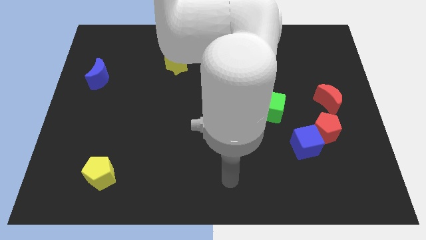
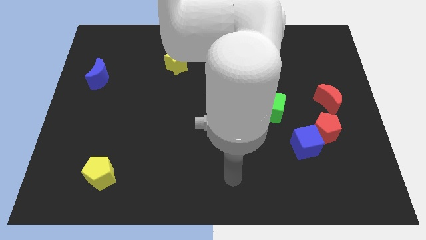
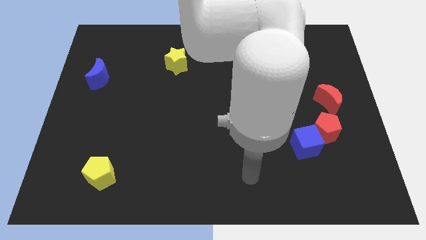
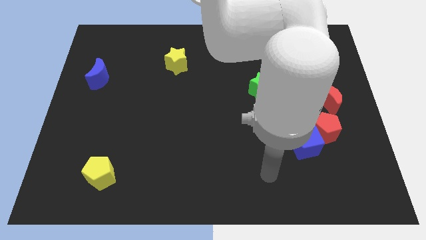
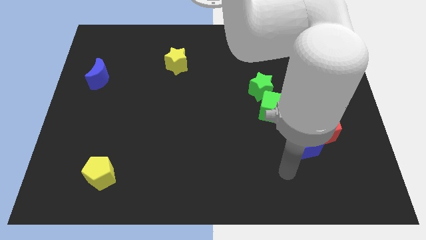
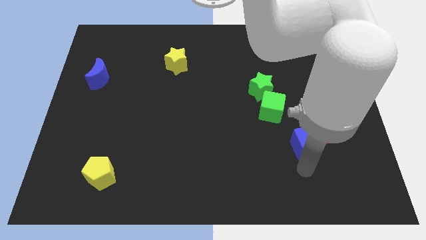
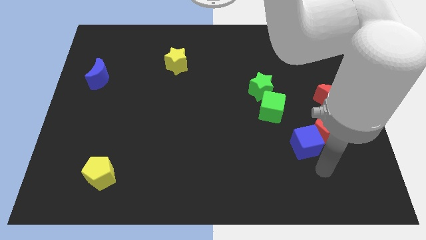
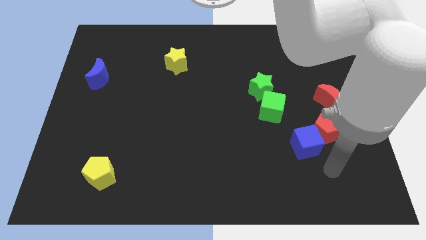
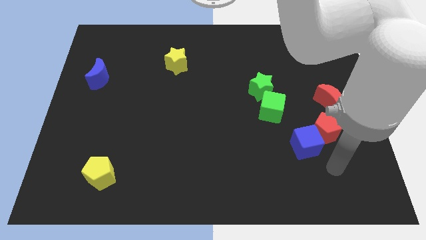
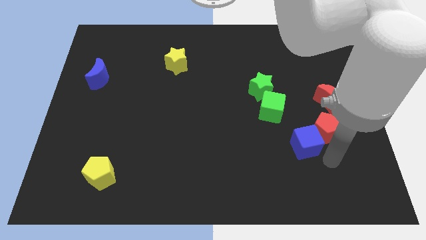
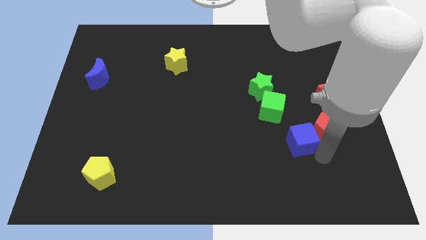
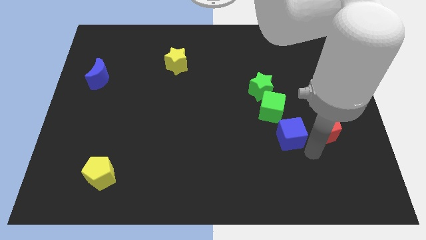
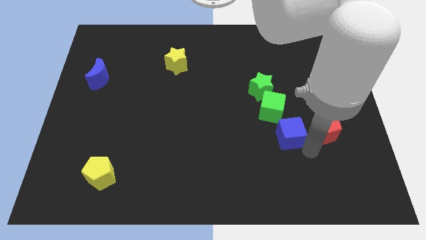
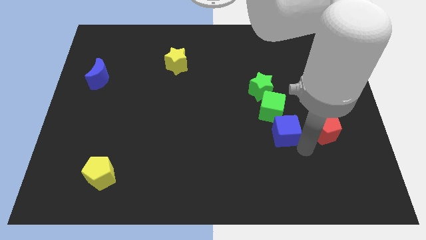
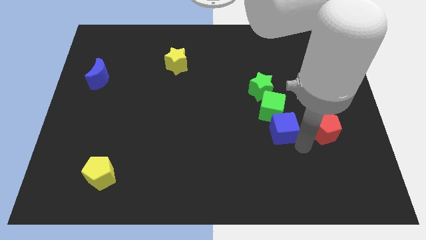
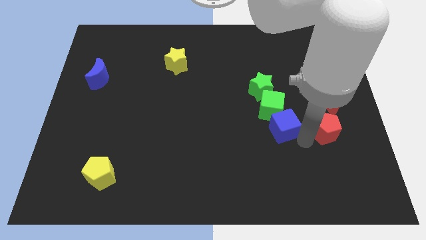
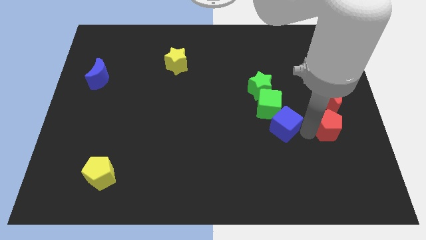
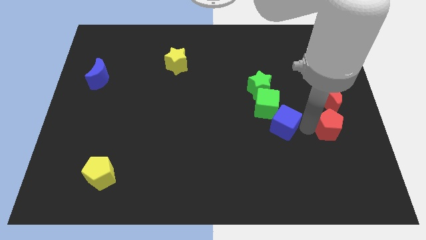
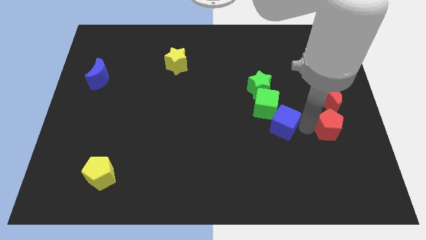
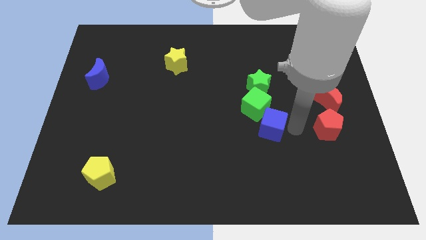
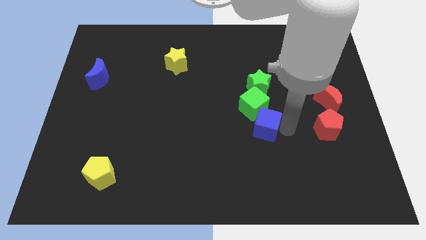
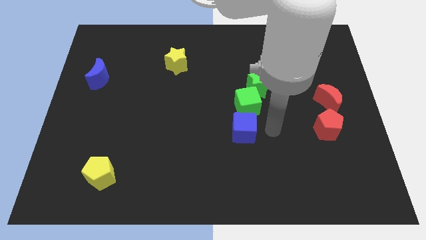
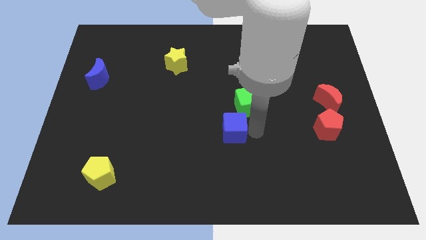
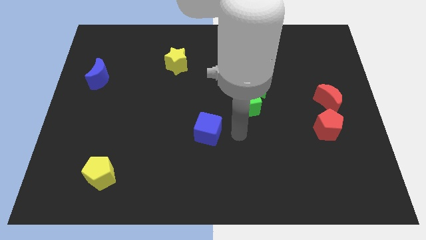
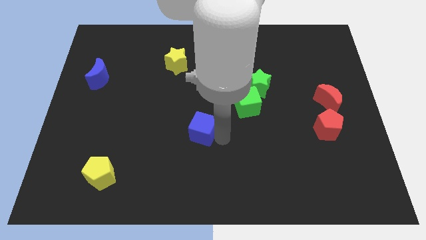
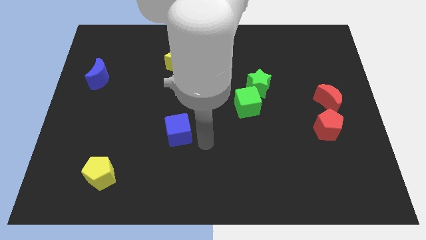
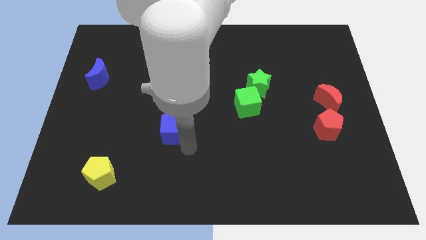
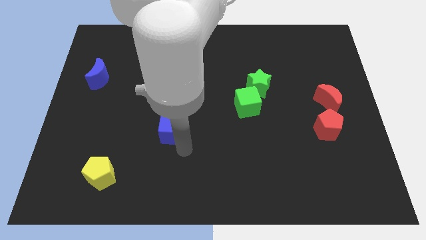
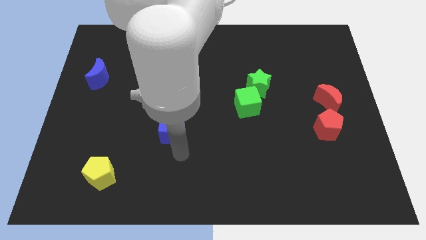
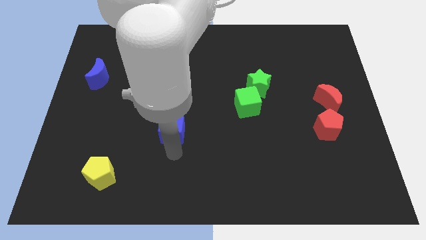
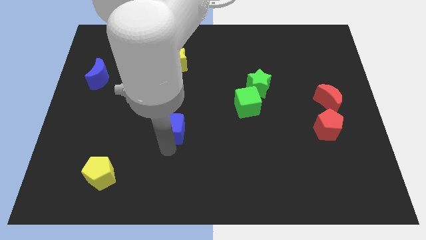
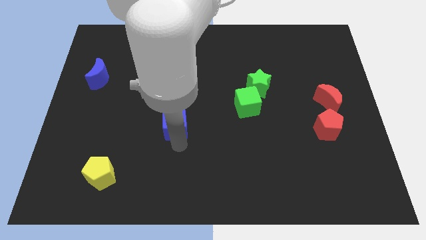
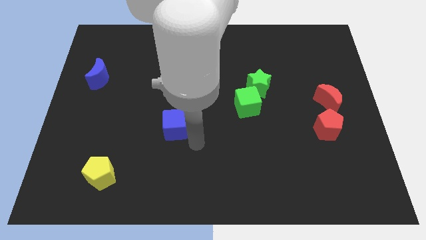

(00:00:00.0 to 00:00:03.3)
move the blue cube below the yellow star

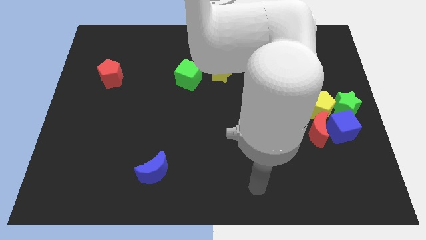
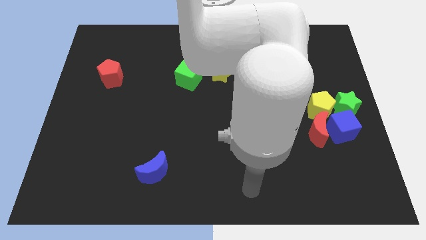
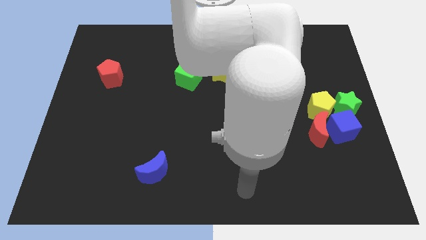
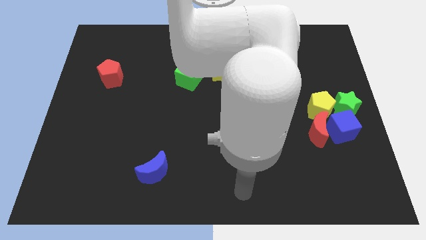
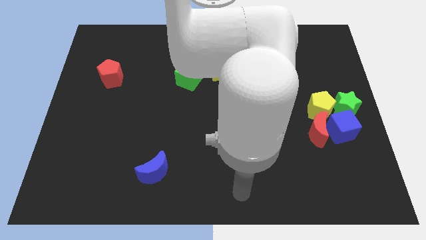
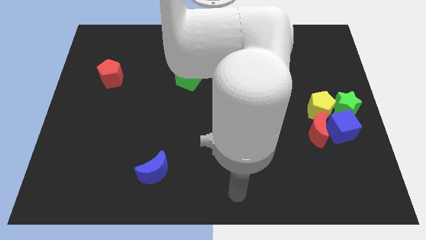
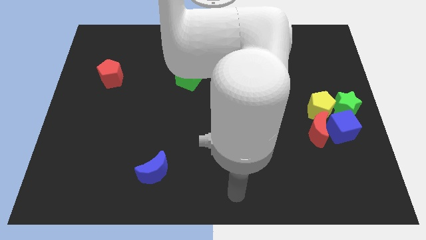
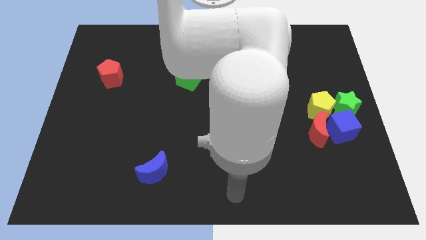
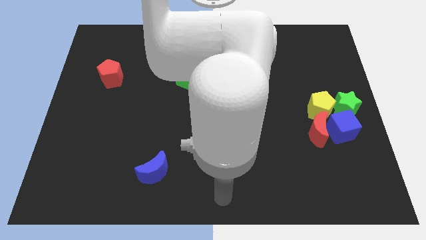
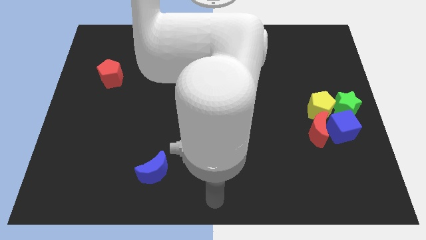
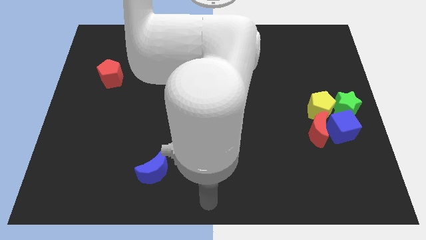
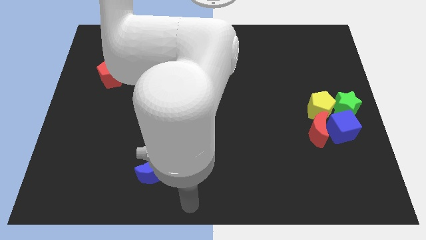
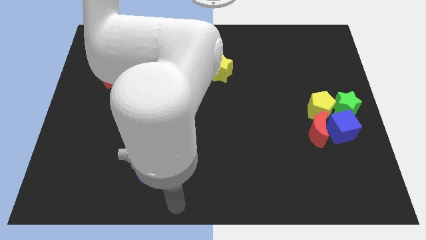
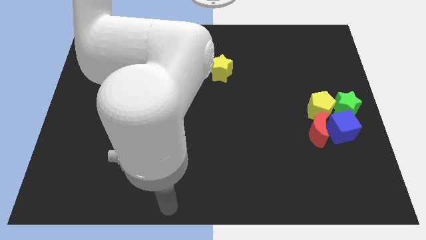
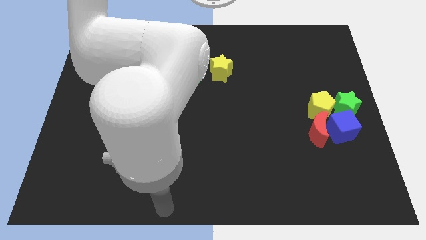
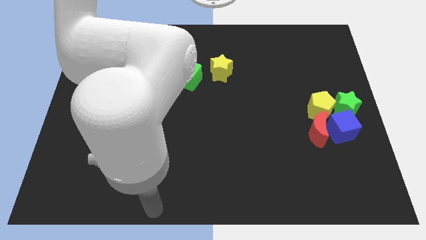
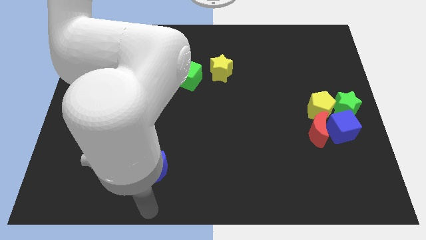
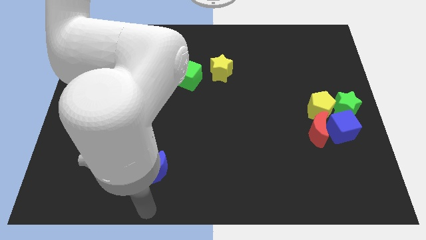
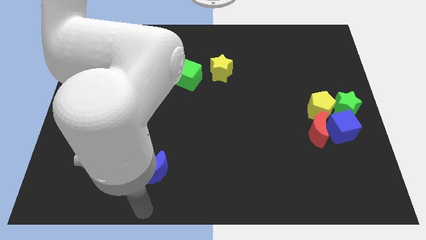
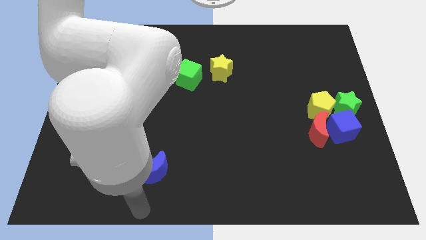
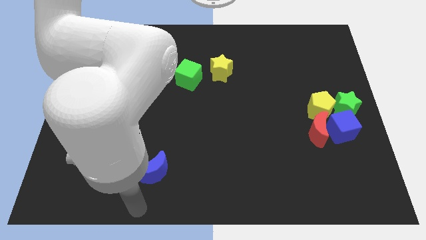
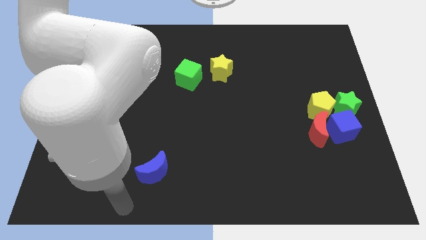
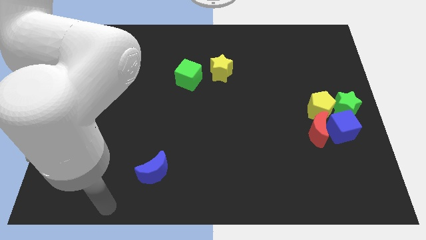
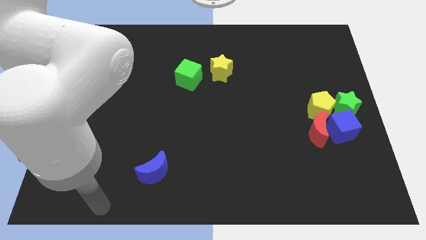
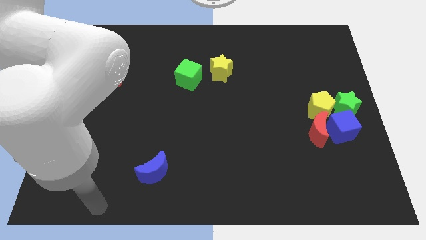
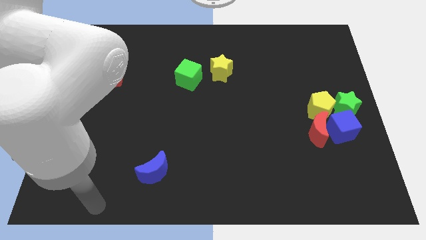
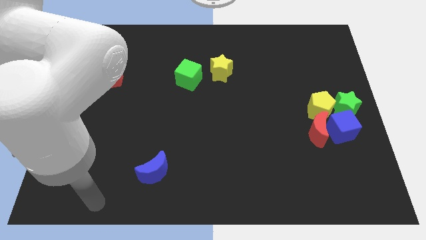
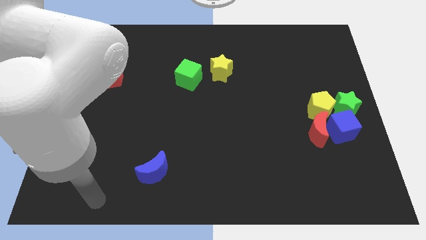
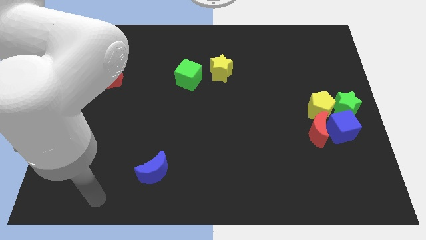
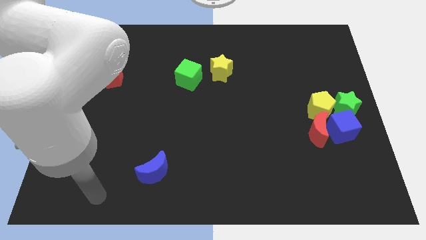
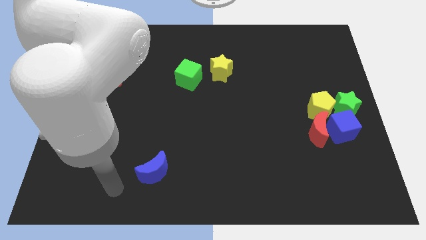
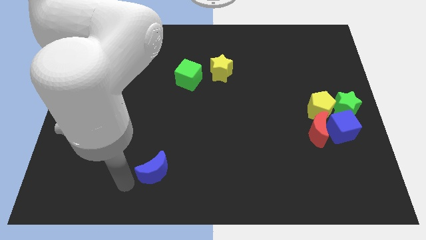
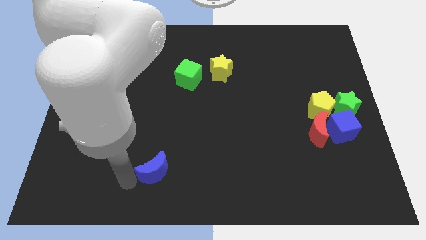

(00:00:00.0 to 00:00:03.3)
move your hand close to the blue moon

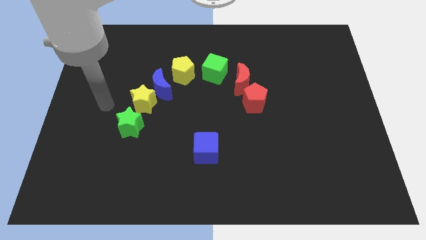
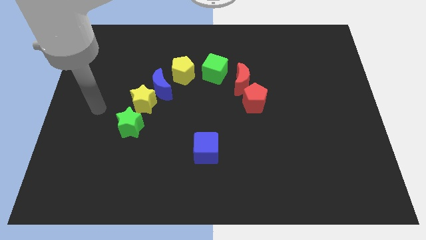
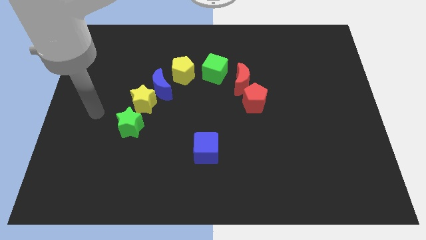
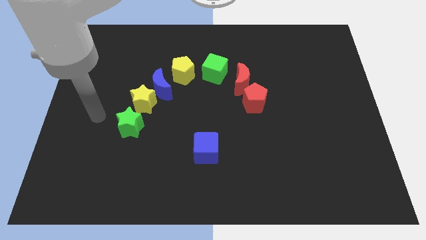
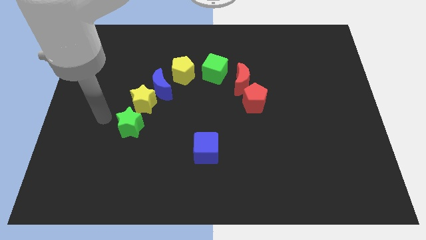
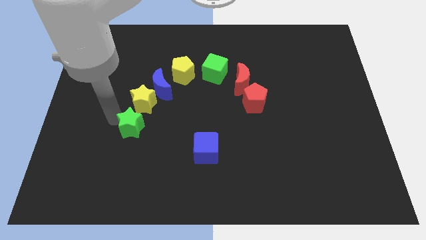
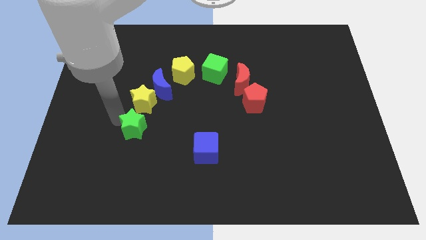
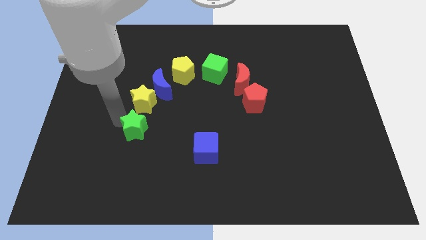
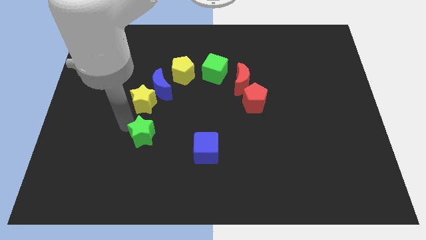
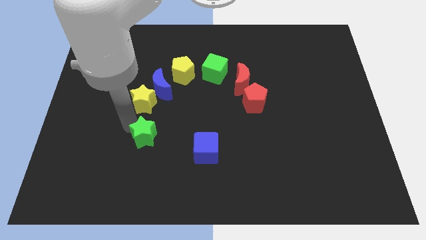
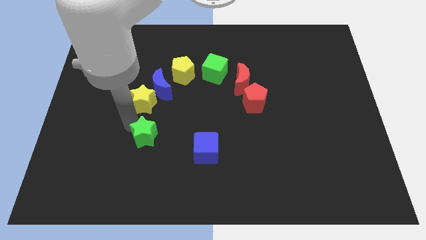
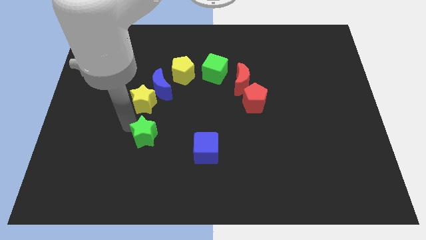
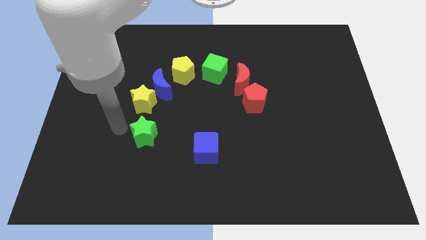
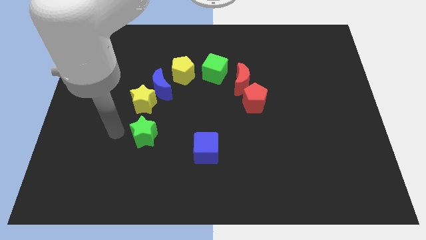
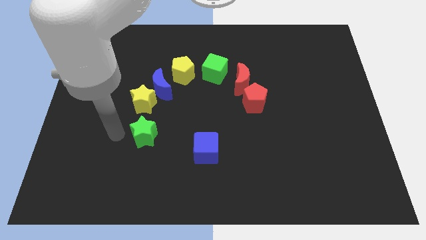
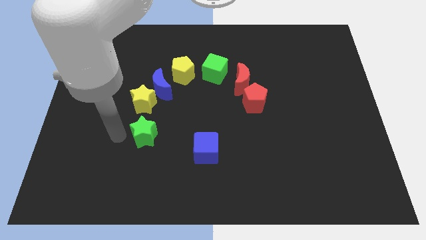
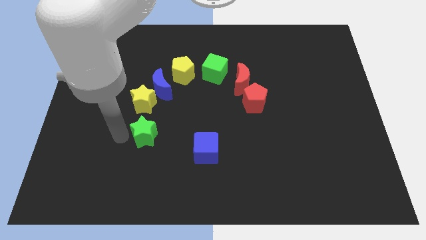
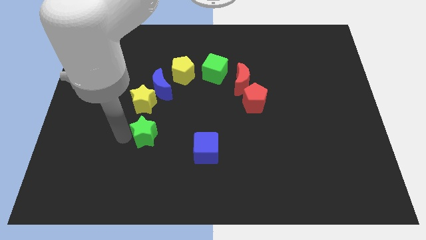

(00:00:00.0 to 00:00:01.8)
push the green star below the yellow star

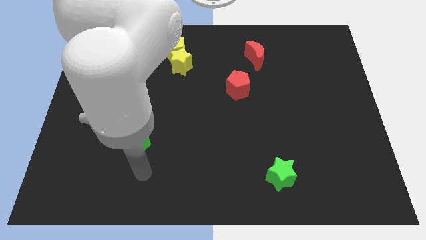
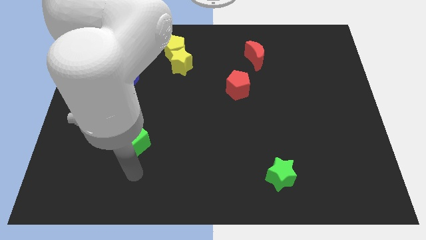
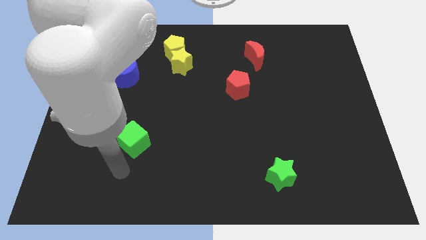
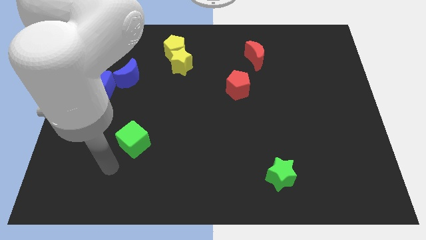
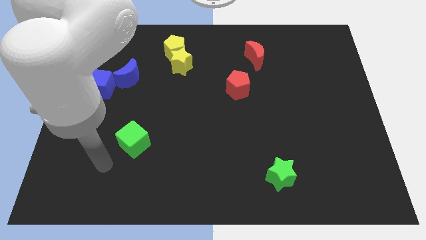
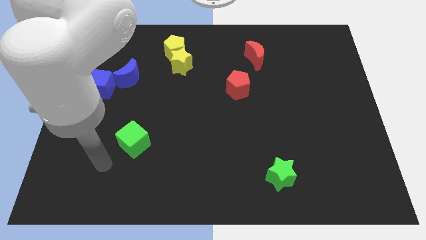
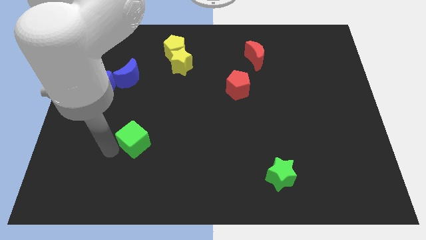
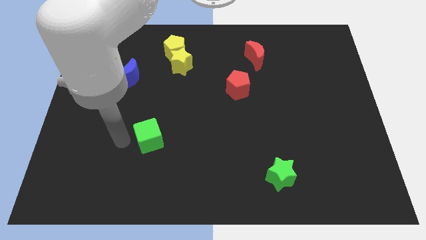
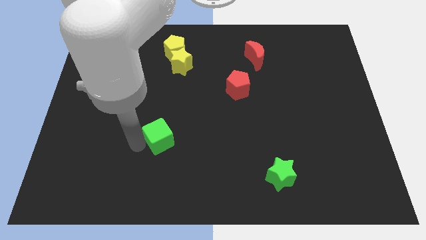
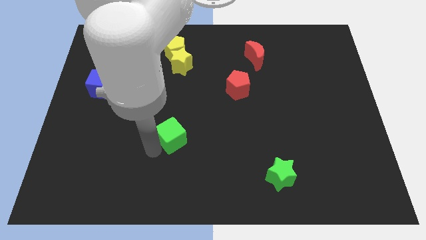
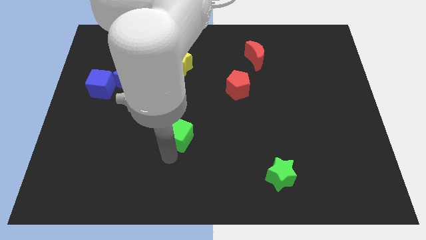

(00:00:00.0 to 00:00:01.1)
place the green cube vertically below to the yellow star
